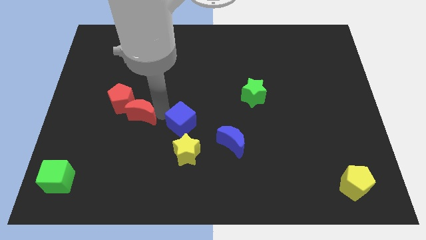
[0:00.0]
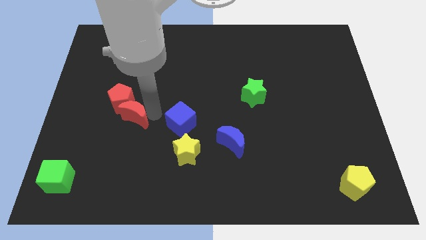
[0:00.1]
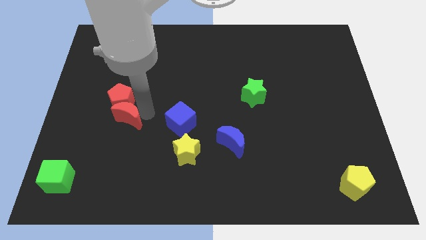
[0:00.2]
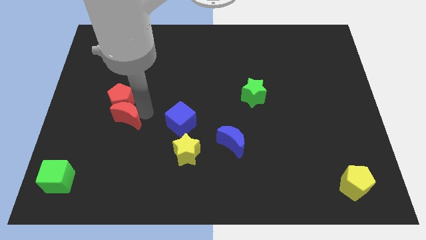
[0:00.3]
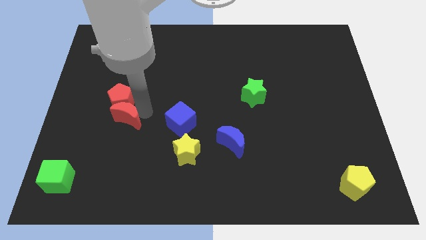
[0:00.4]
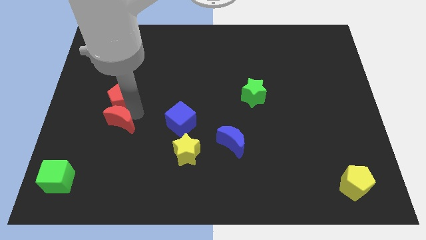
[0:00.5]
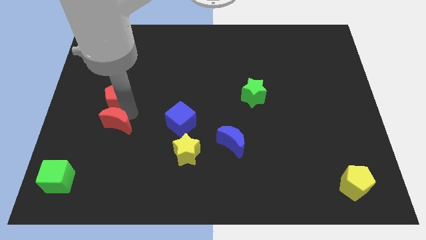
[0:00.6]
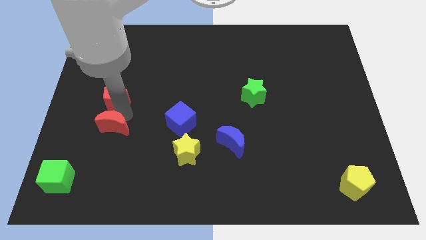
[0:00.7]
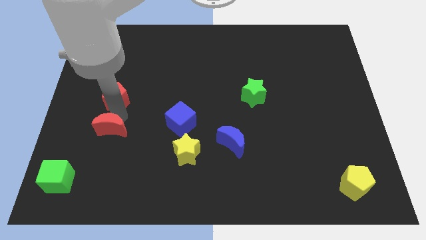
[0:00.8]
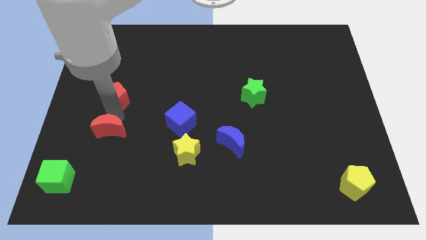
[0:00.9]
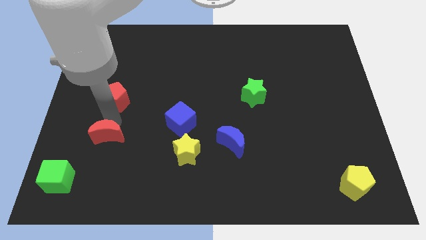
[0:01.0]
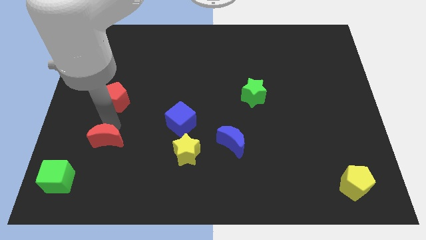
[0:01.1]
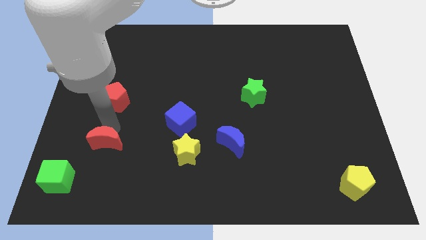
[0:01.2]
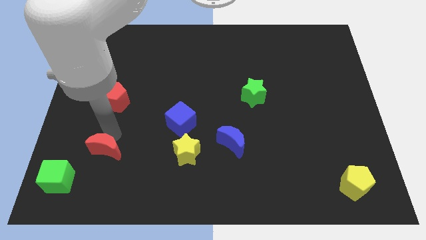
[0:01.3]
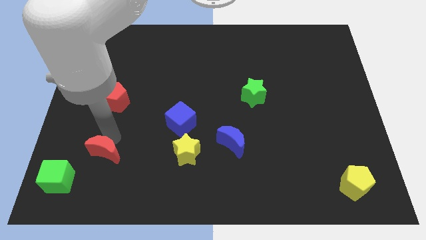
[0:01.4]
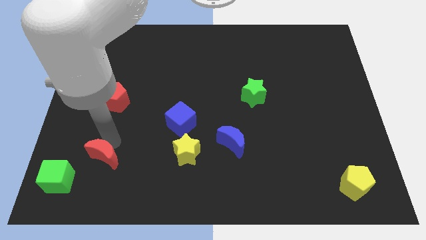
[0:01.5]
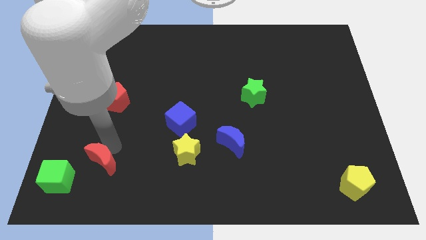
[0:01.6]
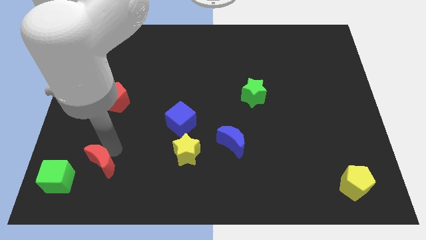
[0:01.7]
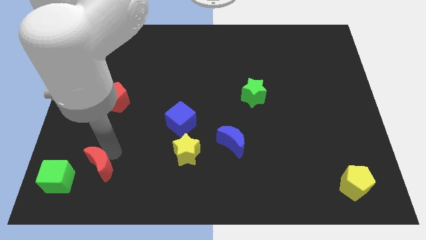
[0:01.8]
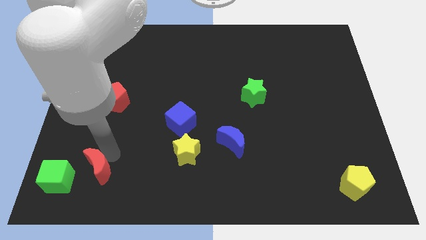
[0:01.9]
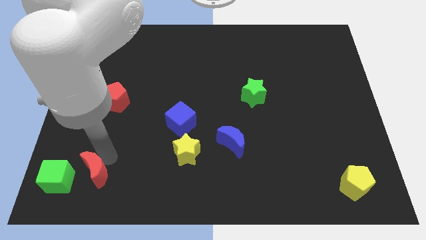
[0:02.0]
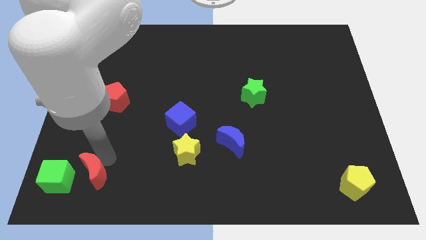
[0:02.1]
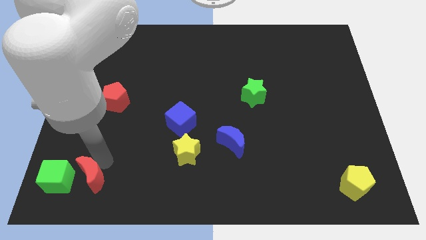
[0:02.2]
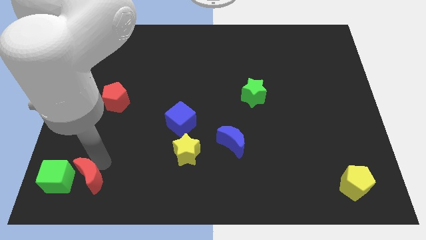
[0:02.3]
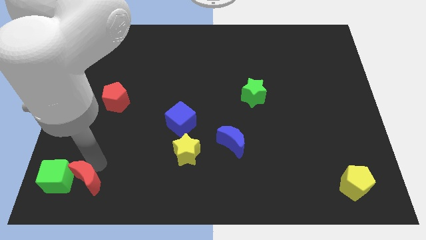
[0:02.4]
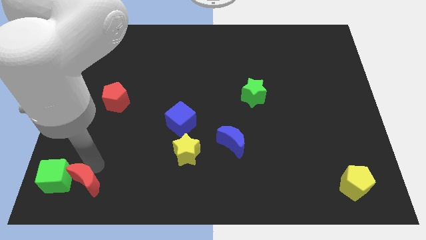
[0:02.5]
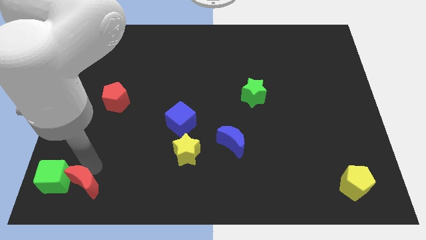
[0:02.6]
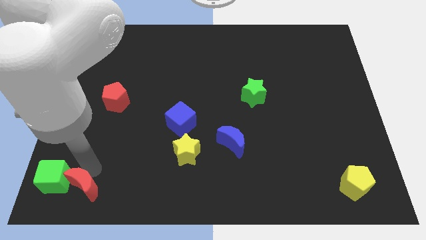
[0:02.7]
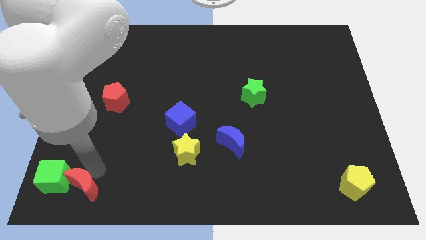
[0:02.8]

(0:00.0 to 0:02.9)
slide the red crescent to the right of the green cube

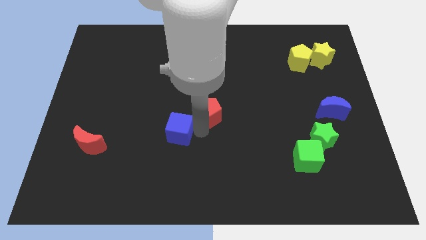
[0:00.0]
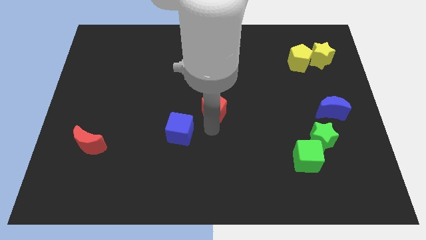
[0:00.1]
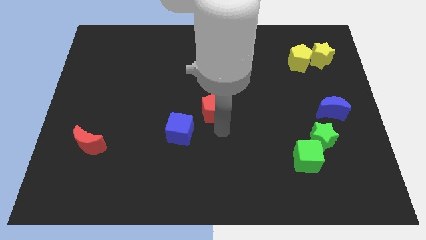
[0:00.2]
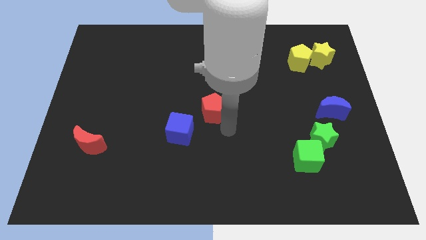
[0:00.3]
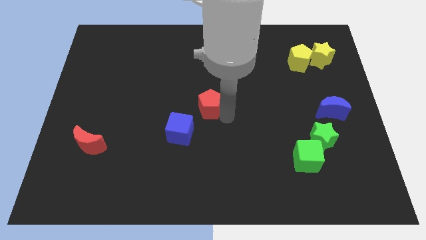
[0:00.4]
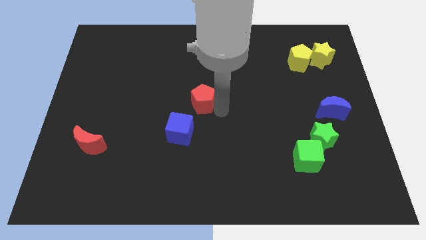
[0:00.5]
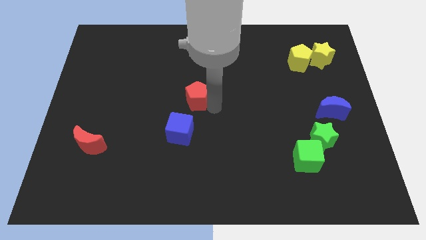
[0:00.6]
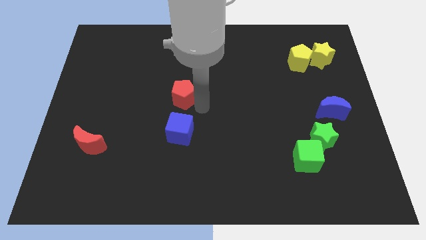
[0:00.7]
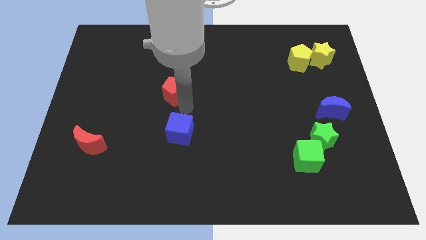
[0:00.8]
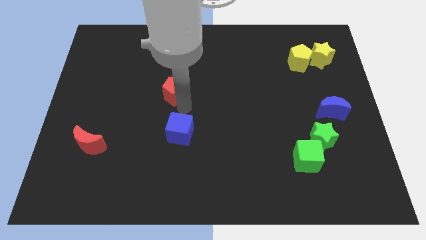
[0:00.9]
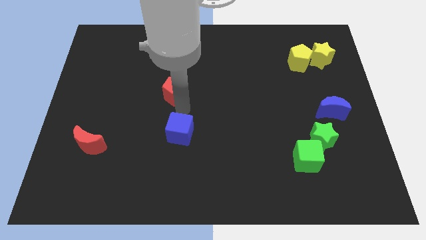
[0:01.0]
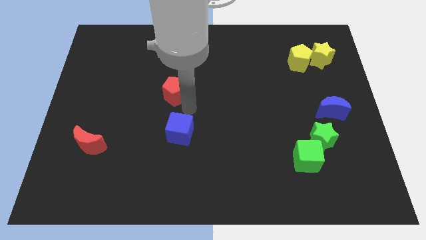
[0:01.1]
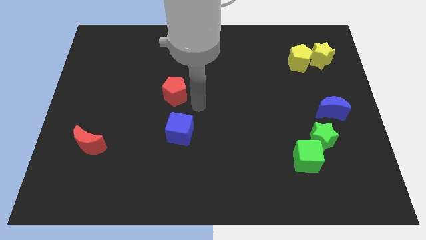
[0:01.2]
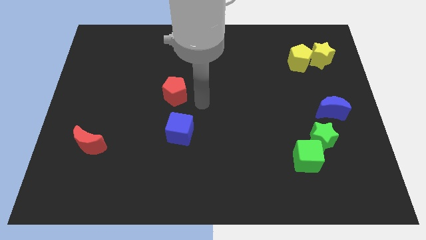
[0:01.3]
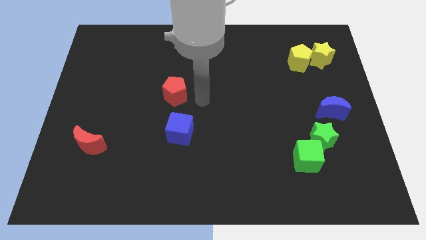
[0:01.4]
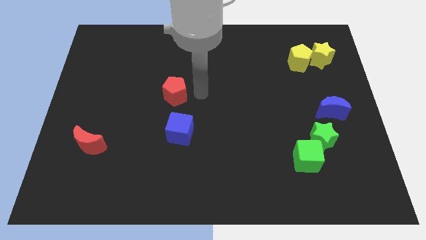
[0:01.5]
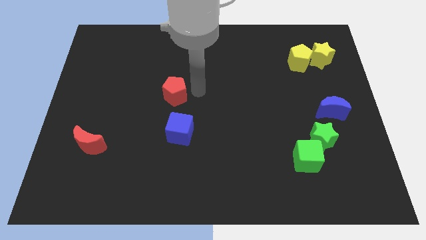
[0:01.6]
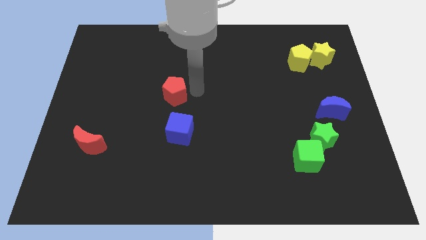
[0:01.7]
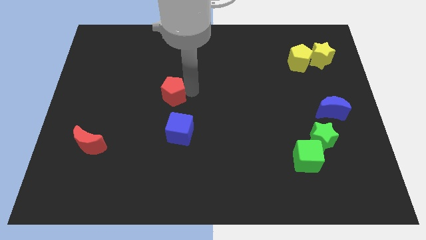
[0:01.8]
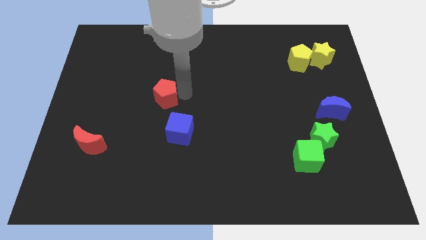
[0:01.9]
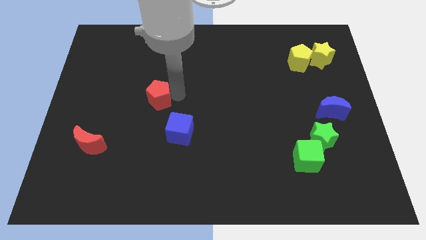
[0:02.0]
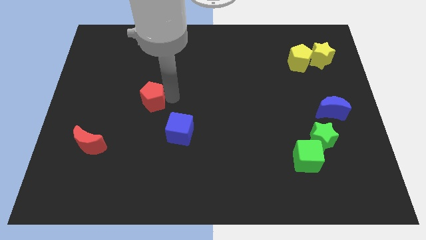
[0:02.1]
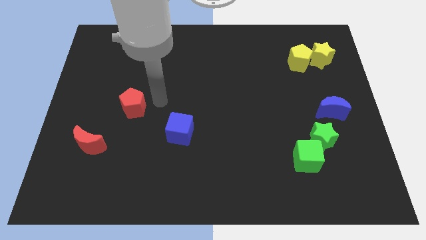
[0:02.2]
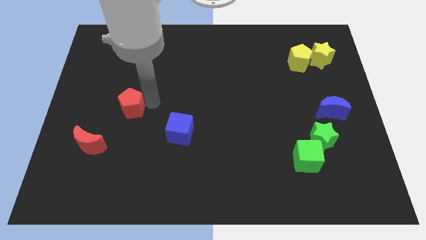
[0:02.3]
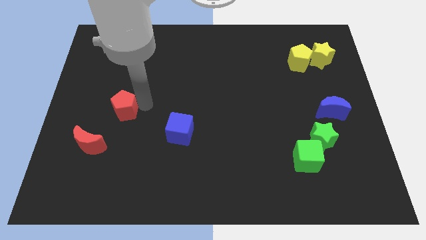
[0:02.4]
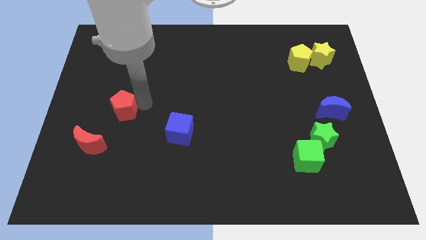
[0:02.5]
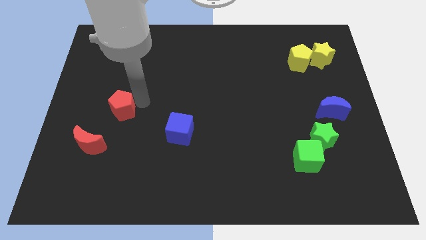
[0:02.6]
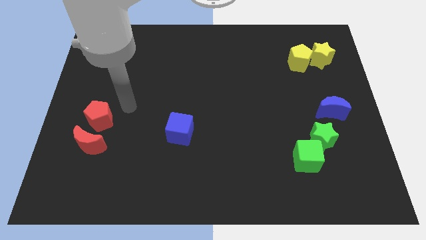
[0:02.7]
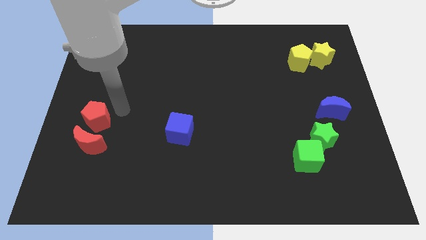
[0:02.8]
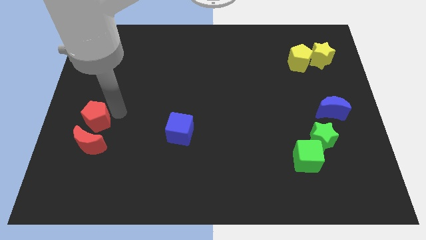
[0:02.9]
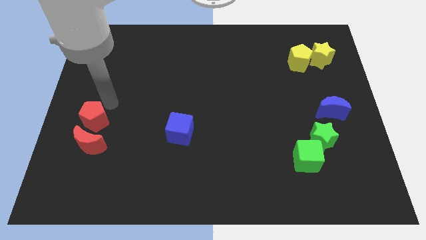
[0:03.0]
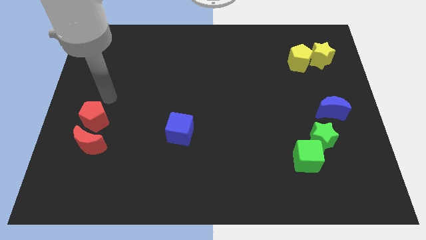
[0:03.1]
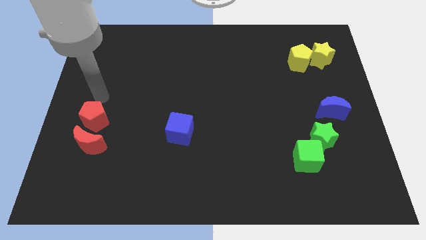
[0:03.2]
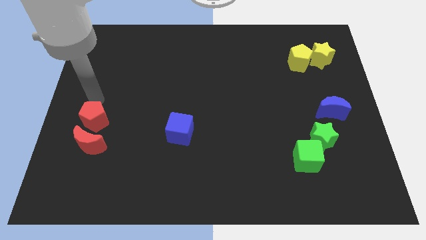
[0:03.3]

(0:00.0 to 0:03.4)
place the red pentagon to the top of the red crescent

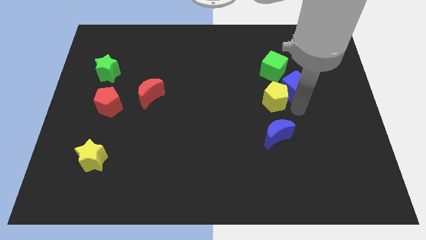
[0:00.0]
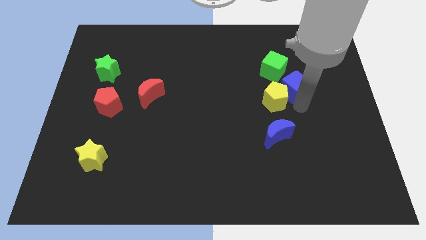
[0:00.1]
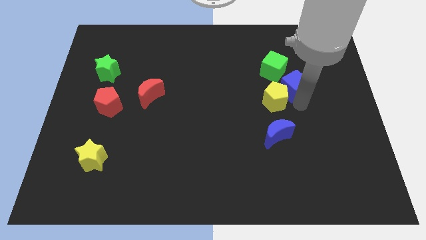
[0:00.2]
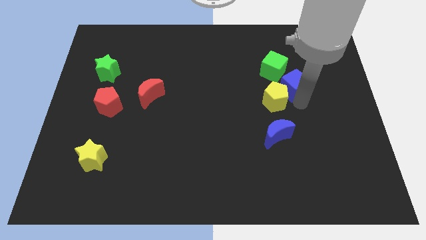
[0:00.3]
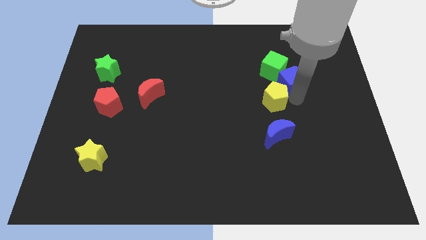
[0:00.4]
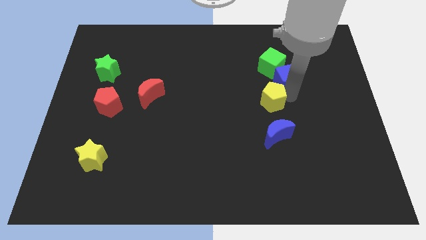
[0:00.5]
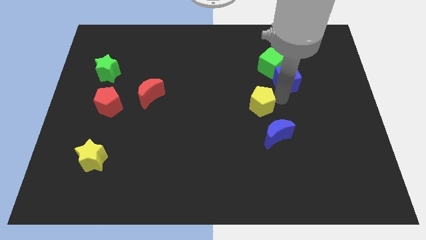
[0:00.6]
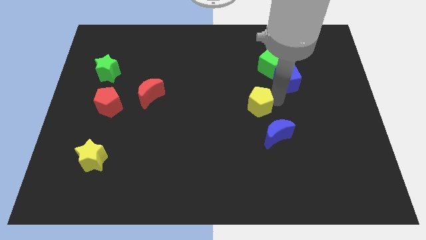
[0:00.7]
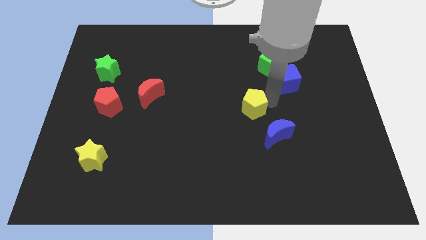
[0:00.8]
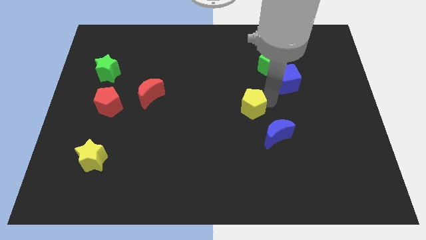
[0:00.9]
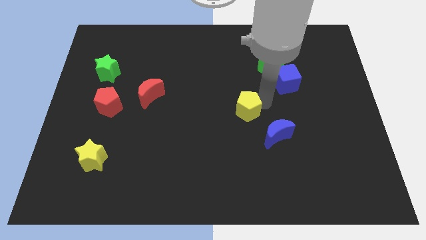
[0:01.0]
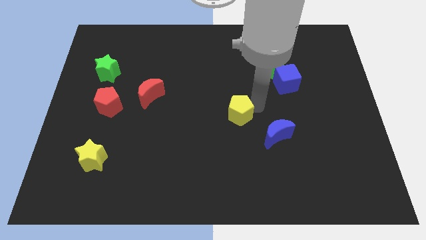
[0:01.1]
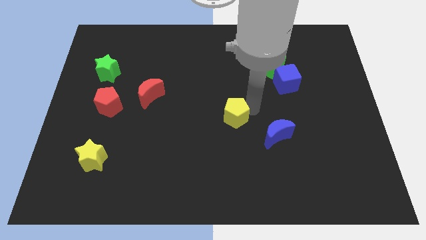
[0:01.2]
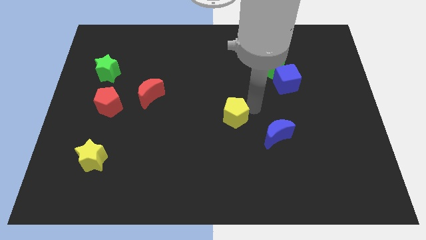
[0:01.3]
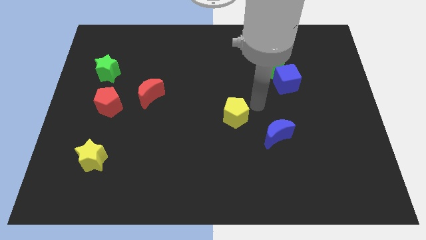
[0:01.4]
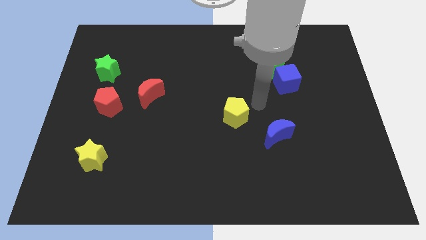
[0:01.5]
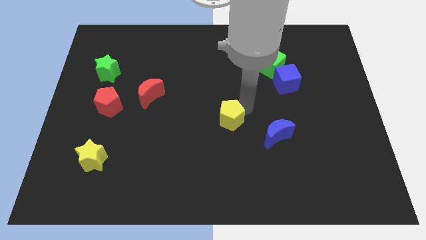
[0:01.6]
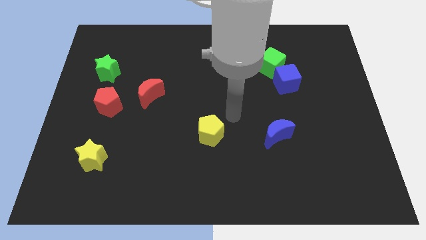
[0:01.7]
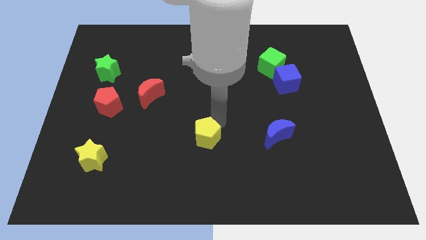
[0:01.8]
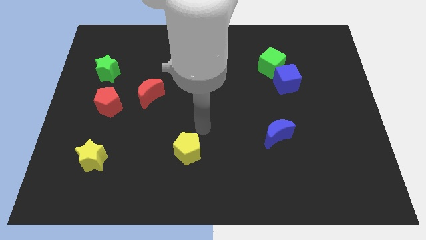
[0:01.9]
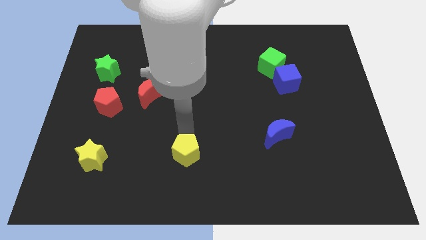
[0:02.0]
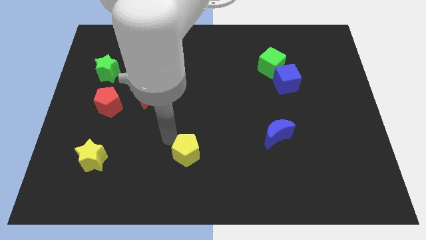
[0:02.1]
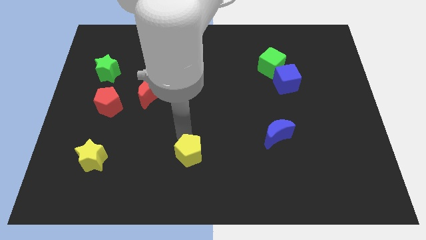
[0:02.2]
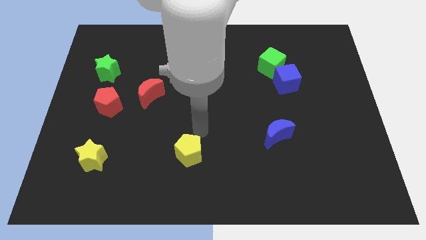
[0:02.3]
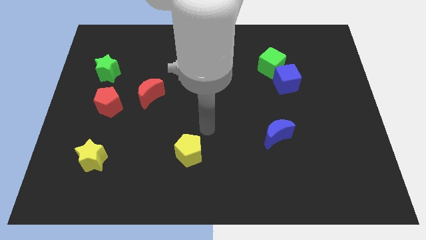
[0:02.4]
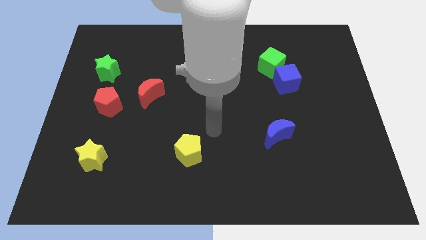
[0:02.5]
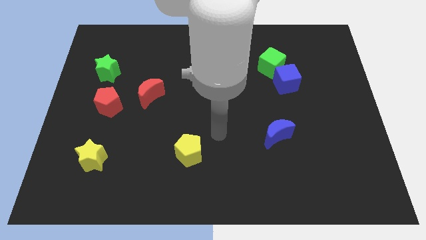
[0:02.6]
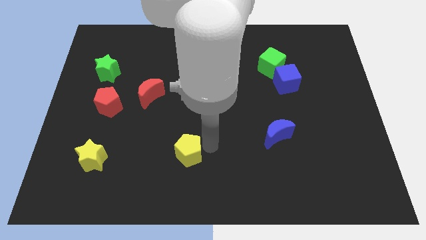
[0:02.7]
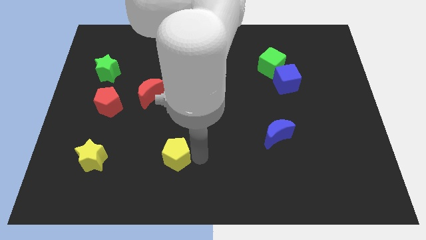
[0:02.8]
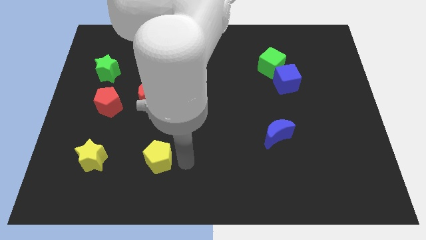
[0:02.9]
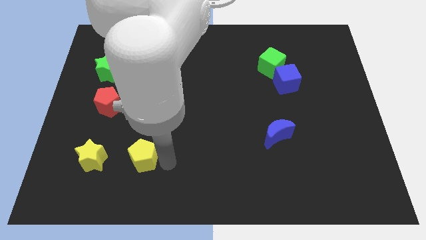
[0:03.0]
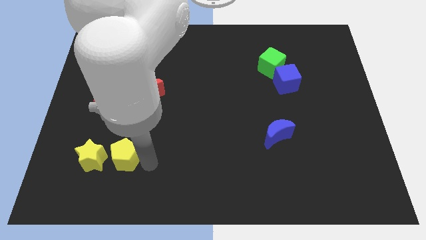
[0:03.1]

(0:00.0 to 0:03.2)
place the yellow pentagon horizontally to the right side of the yellow star
